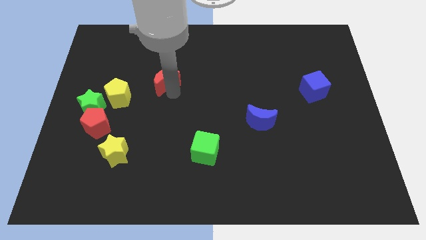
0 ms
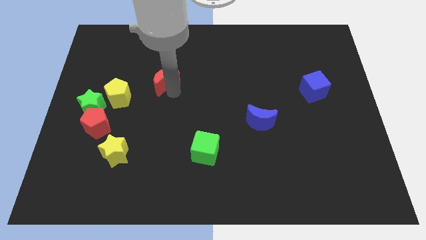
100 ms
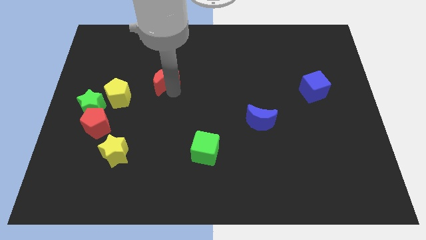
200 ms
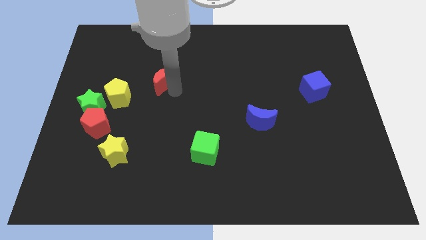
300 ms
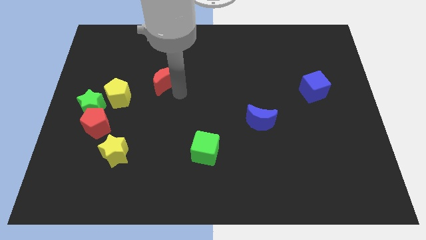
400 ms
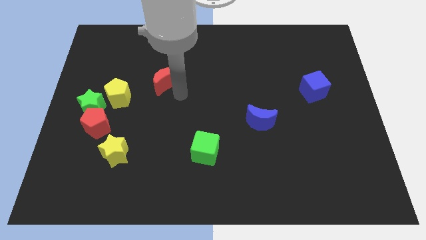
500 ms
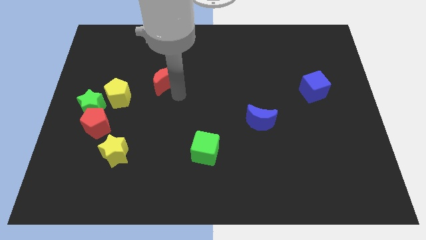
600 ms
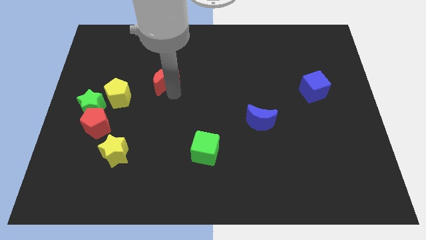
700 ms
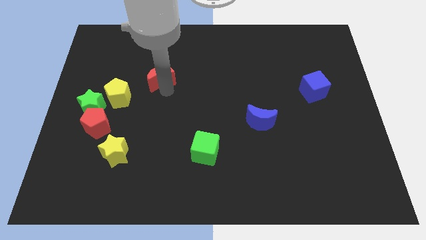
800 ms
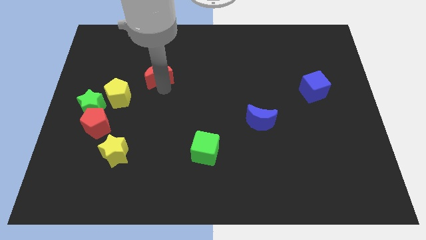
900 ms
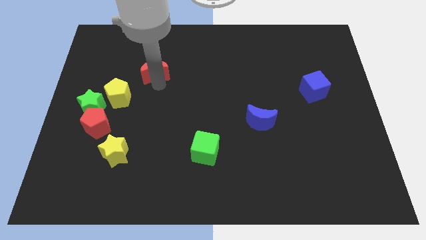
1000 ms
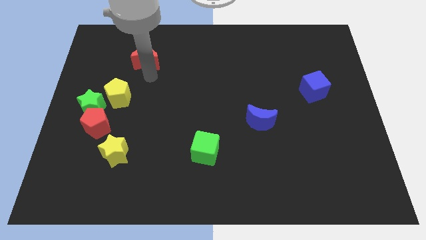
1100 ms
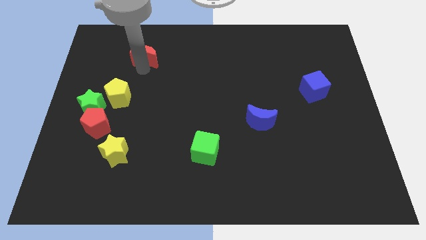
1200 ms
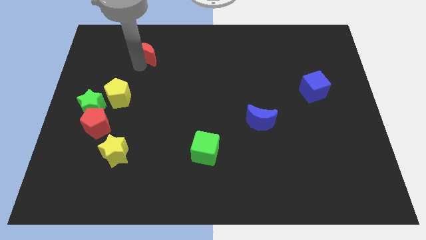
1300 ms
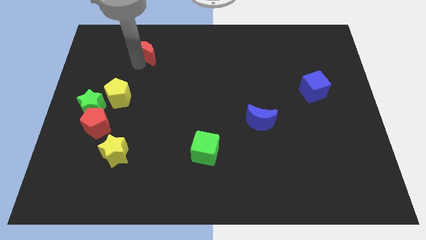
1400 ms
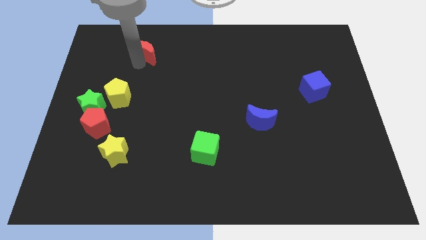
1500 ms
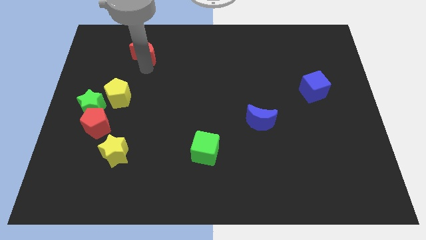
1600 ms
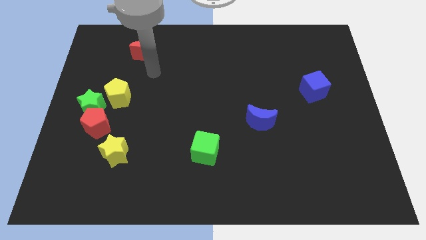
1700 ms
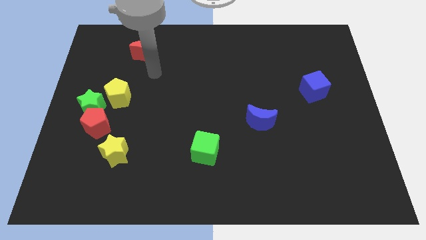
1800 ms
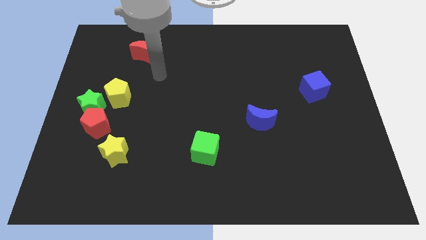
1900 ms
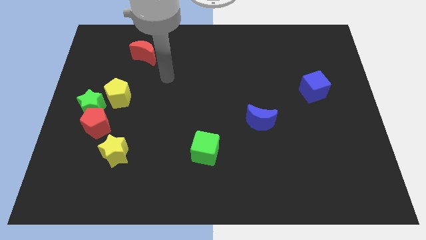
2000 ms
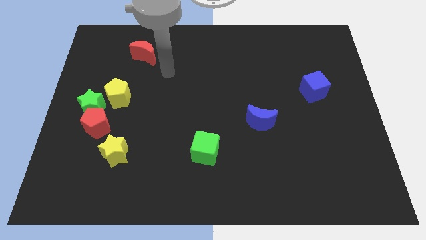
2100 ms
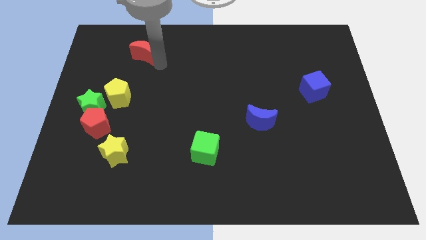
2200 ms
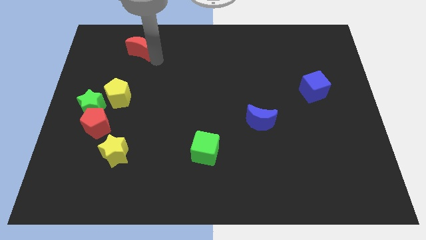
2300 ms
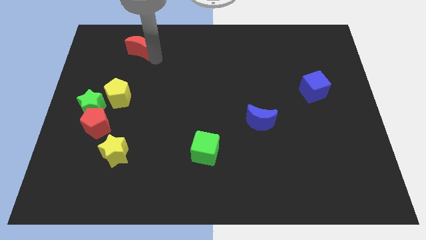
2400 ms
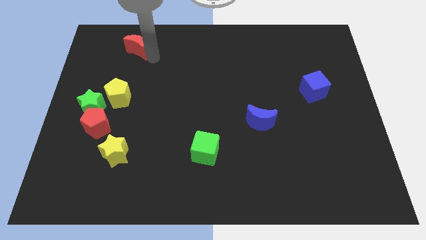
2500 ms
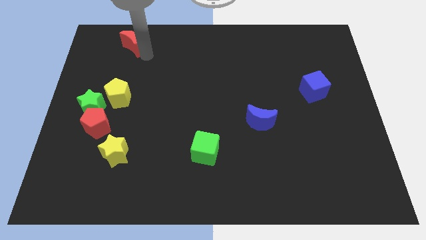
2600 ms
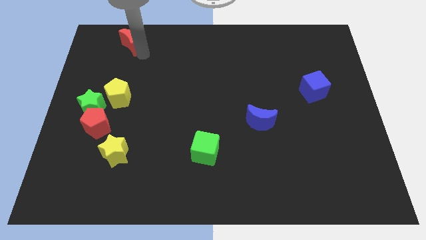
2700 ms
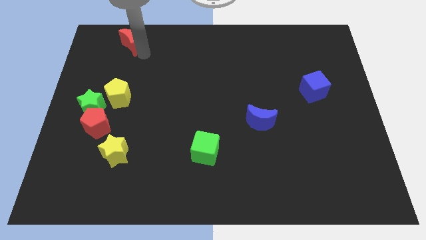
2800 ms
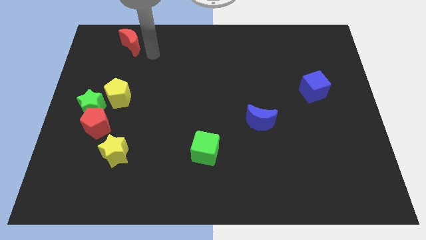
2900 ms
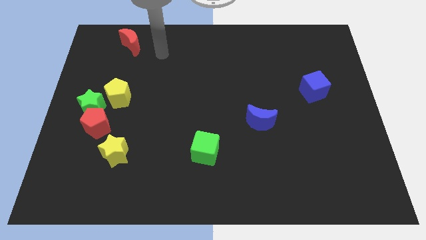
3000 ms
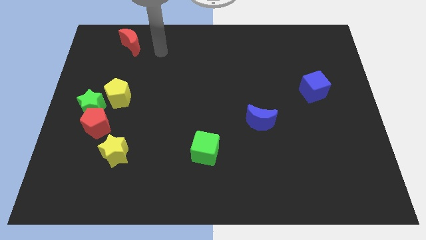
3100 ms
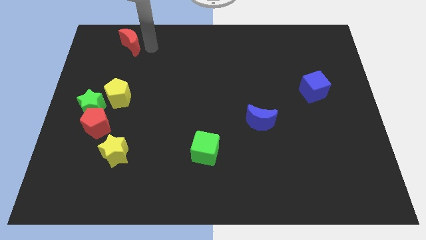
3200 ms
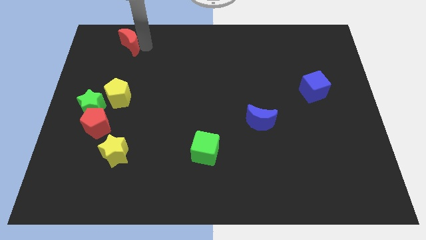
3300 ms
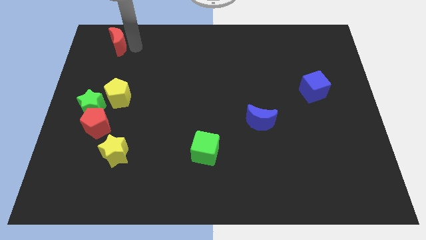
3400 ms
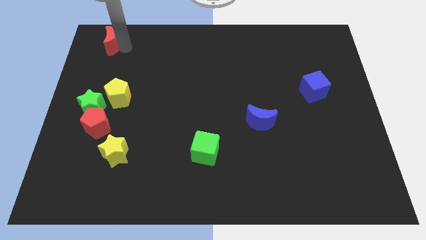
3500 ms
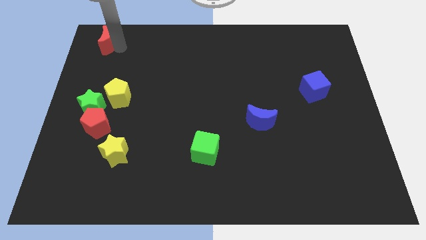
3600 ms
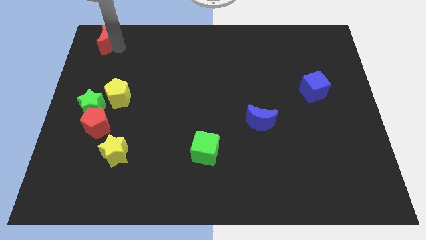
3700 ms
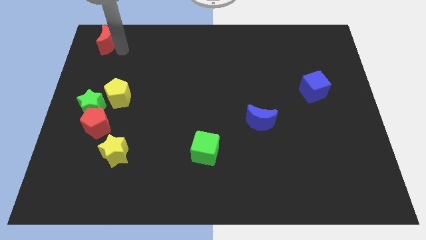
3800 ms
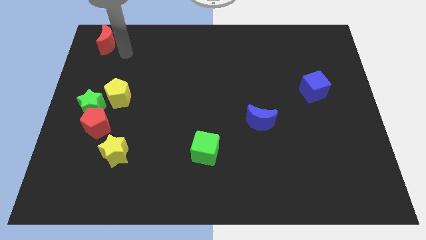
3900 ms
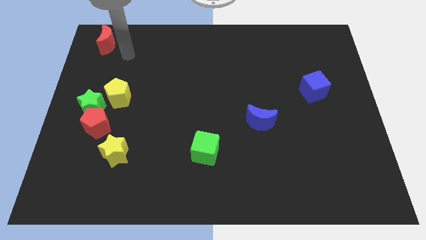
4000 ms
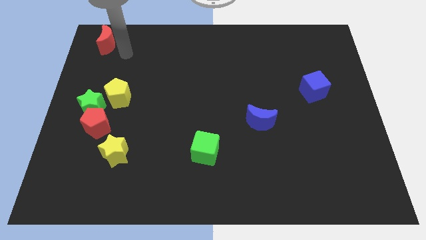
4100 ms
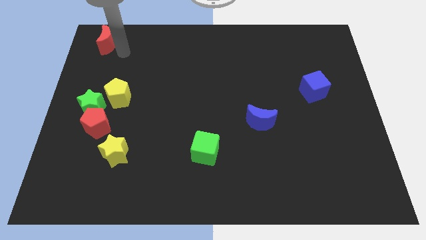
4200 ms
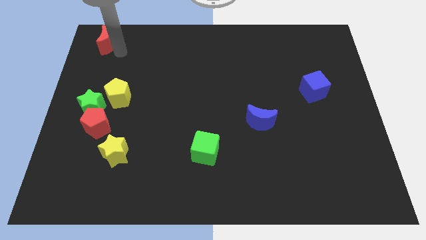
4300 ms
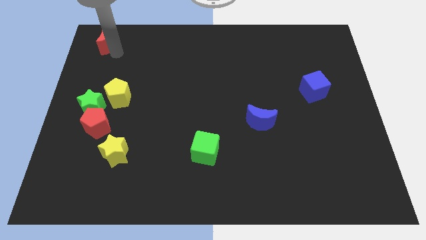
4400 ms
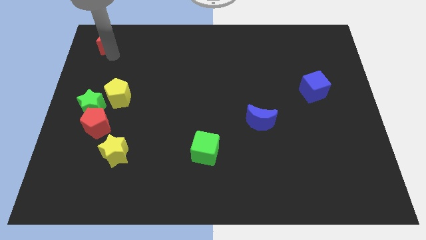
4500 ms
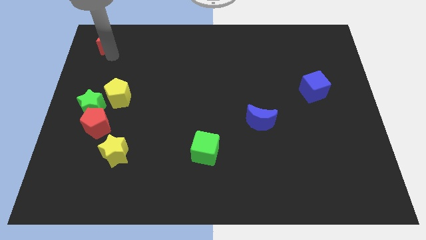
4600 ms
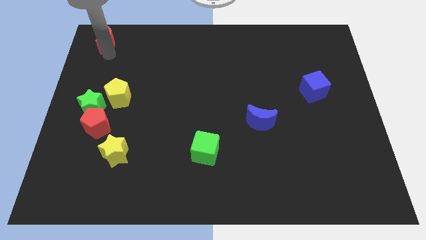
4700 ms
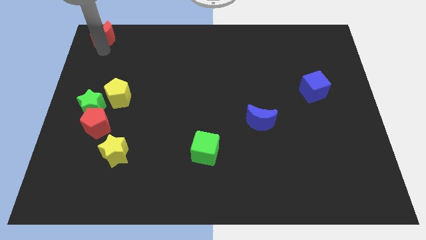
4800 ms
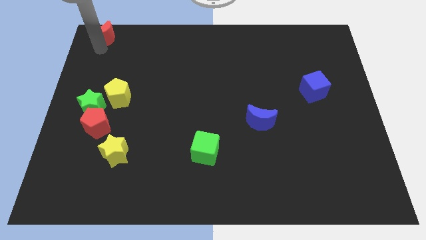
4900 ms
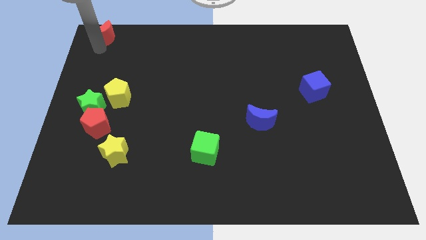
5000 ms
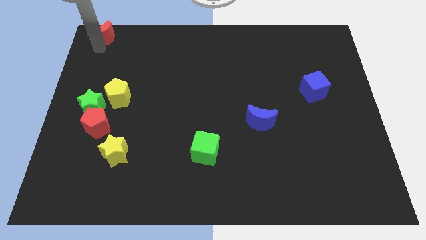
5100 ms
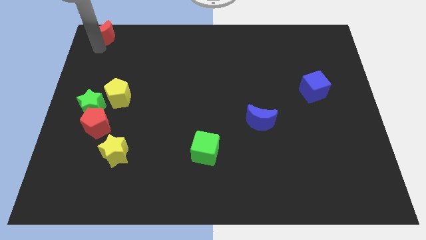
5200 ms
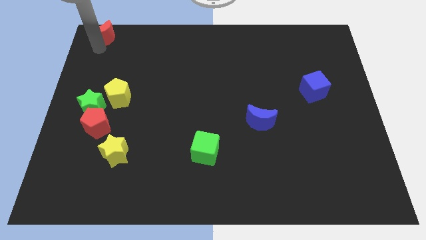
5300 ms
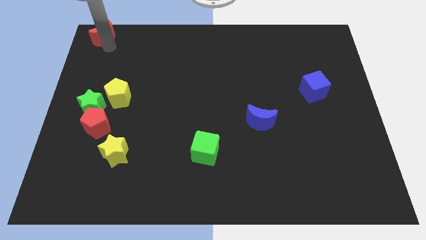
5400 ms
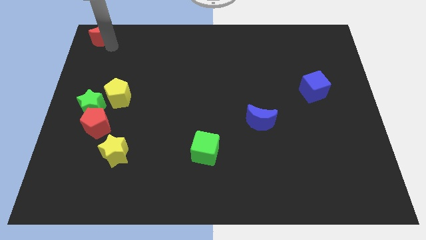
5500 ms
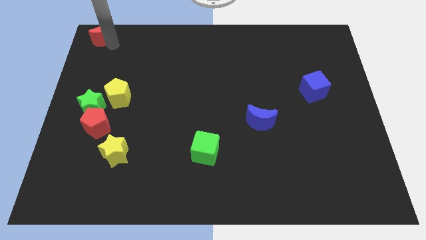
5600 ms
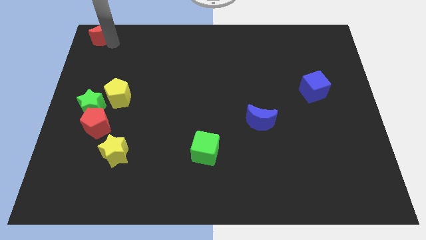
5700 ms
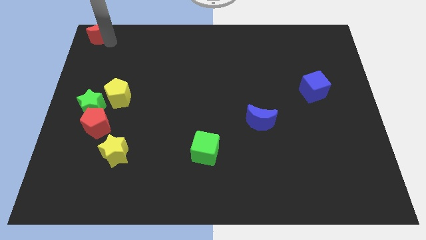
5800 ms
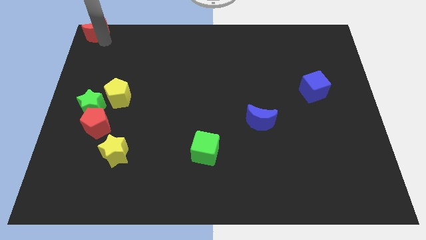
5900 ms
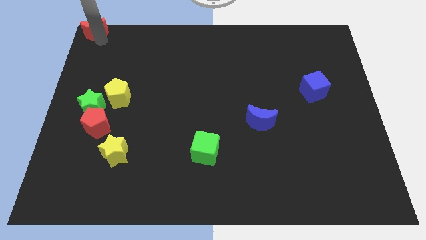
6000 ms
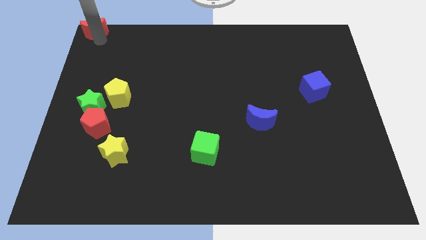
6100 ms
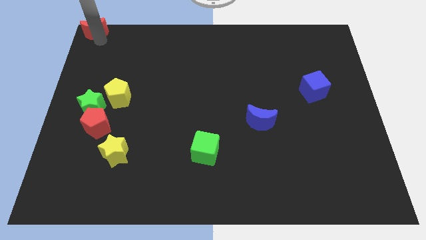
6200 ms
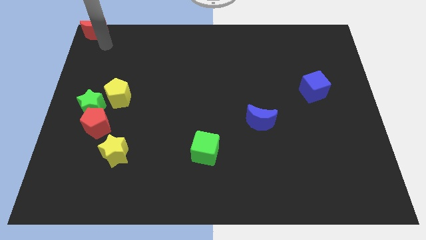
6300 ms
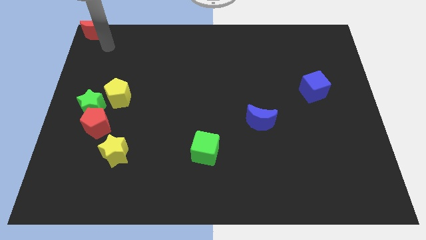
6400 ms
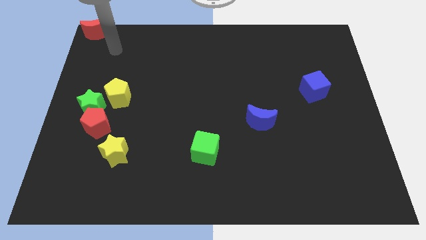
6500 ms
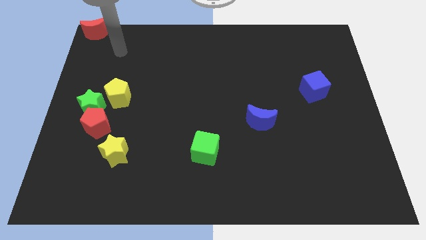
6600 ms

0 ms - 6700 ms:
drag the red crescent to the top left corner of the board

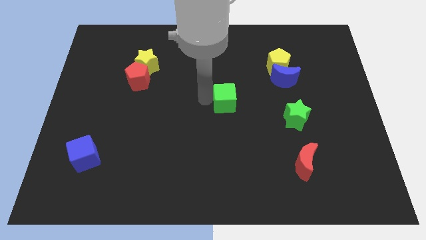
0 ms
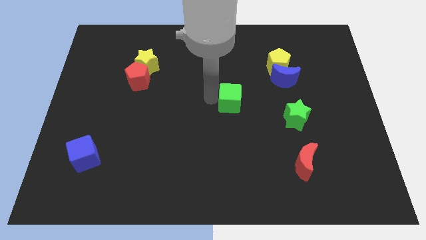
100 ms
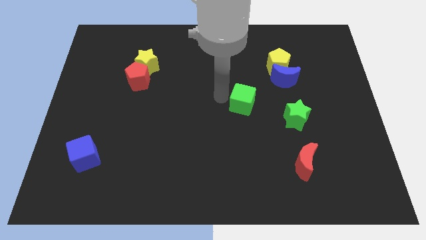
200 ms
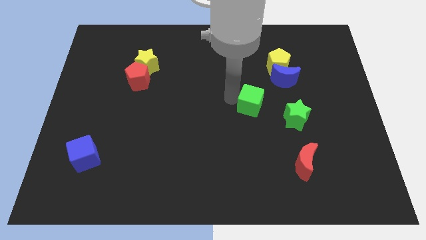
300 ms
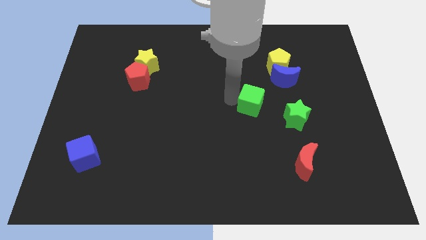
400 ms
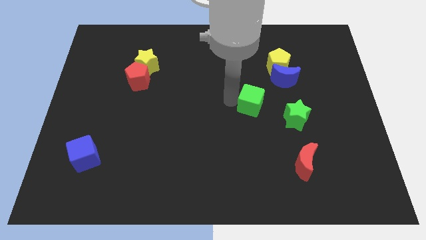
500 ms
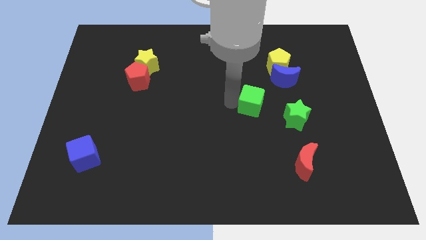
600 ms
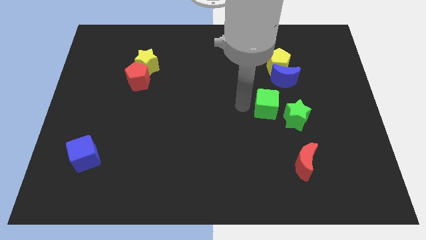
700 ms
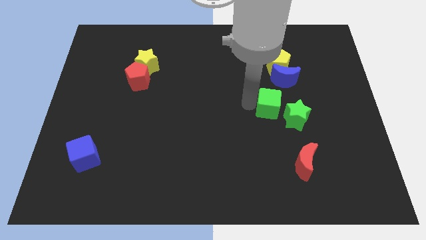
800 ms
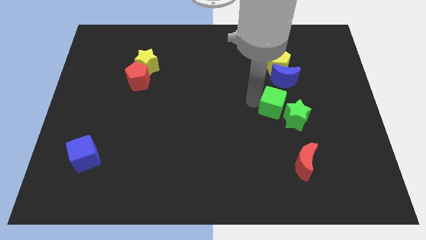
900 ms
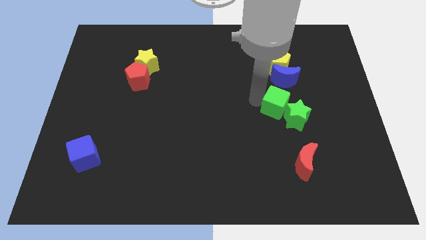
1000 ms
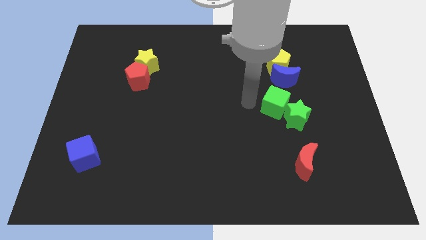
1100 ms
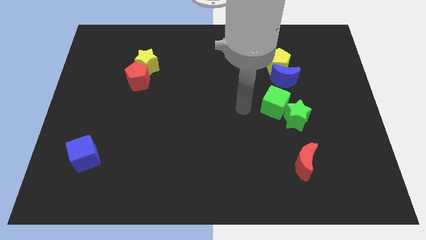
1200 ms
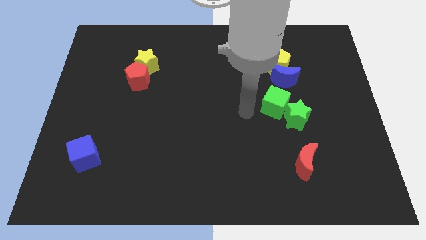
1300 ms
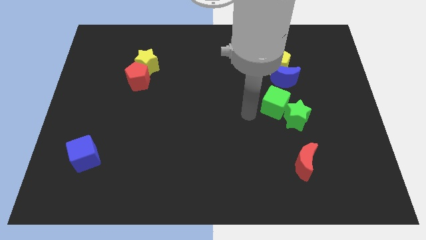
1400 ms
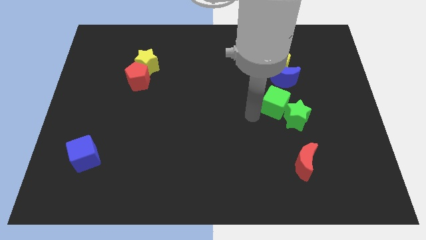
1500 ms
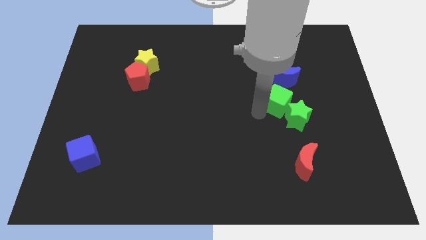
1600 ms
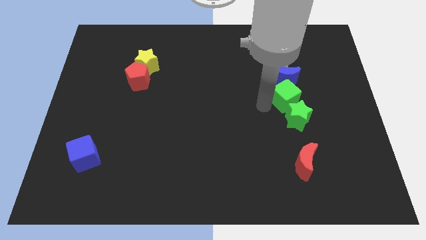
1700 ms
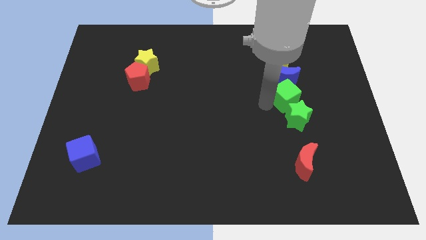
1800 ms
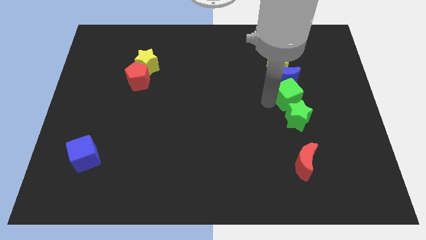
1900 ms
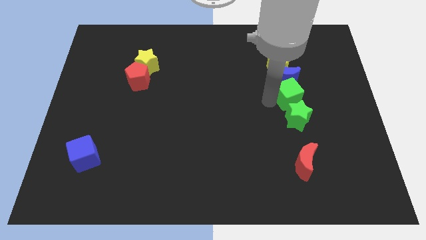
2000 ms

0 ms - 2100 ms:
place the green cube between blue crescent and green star
